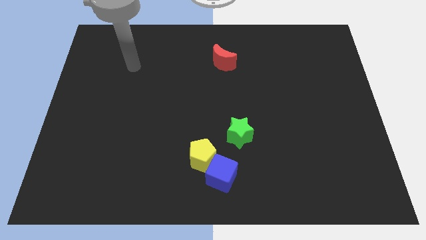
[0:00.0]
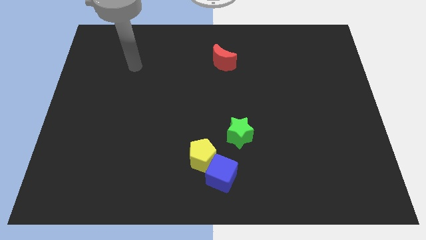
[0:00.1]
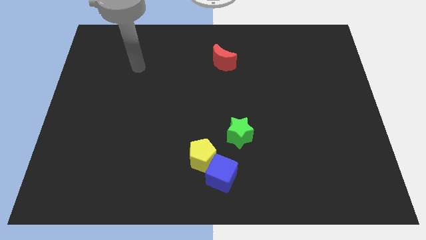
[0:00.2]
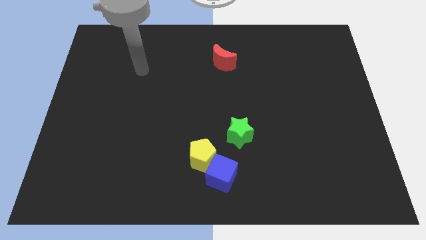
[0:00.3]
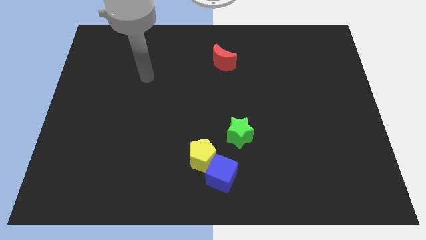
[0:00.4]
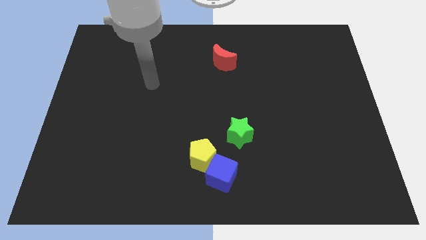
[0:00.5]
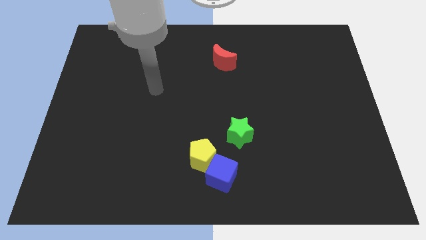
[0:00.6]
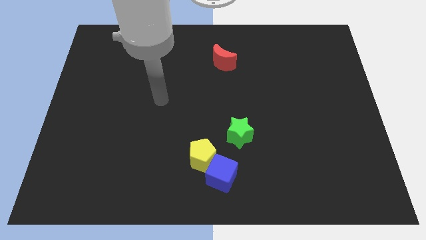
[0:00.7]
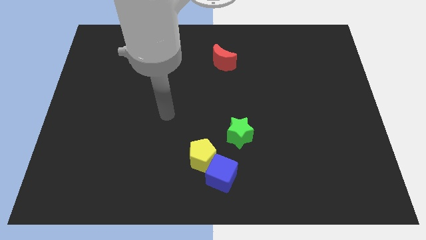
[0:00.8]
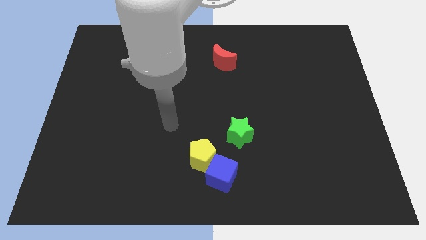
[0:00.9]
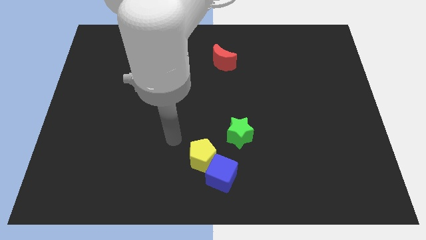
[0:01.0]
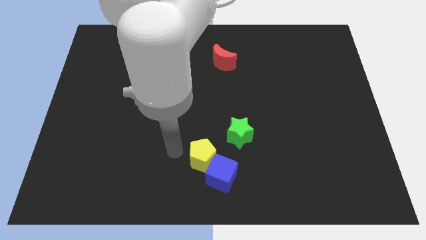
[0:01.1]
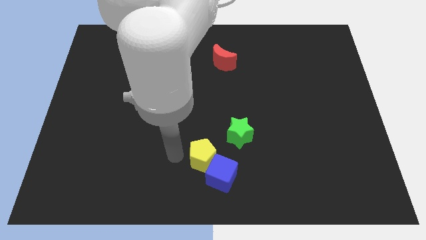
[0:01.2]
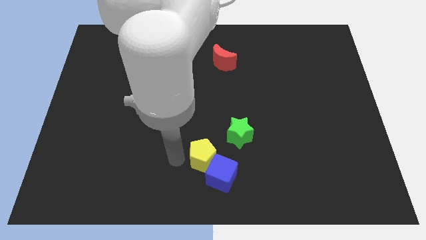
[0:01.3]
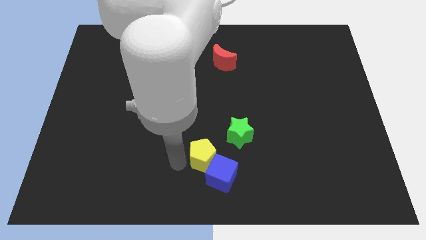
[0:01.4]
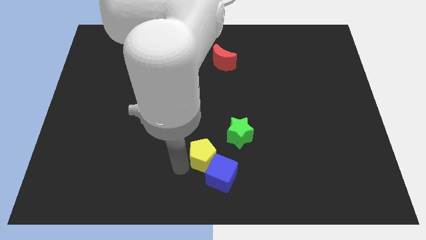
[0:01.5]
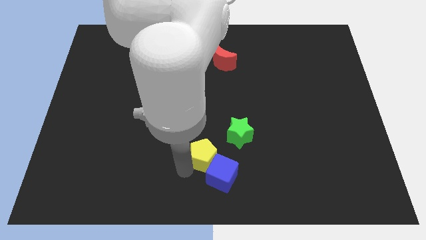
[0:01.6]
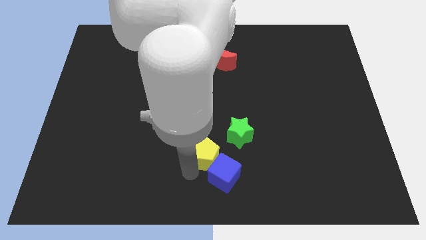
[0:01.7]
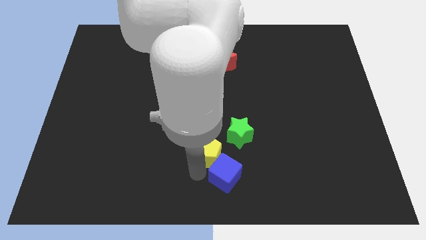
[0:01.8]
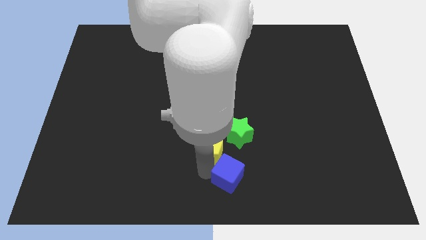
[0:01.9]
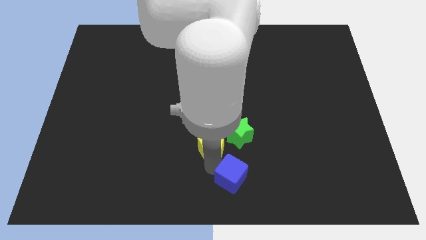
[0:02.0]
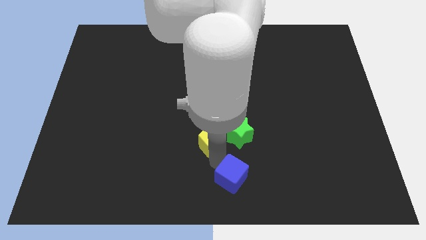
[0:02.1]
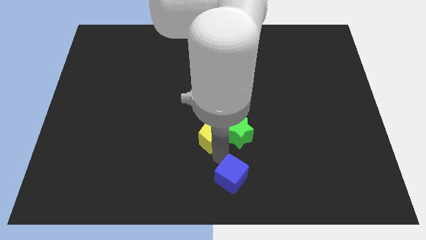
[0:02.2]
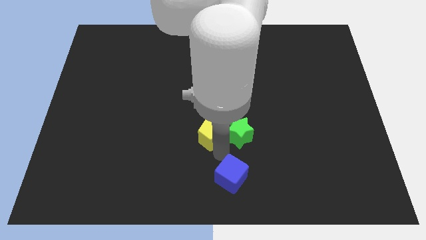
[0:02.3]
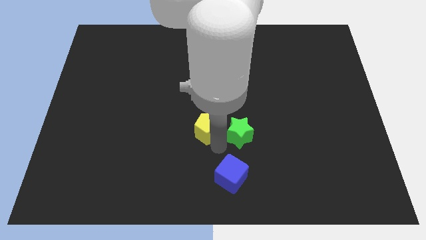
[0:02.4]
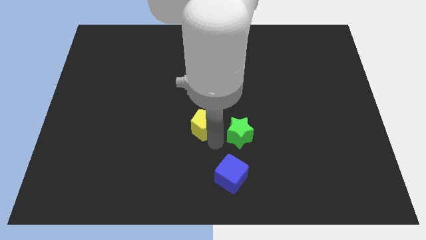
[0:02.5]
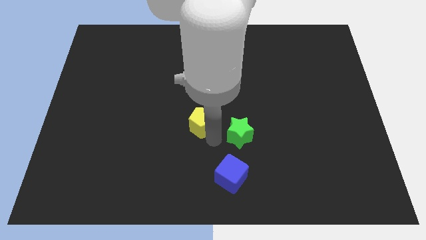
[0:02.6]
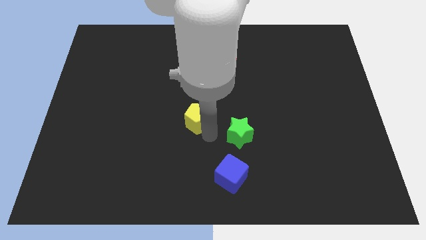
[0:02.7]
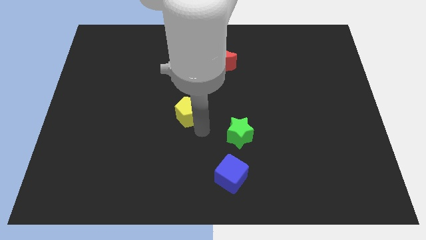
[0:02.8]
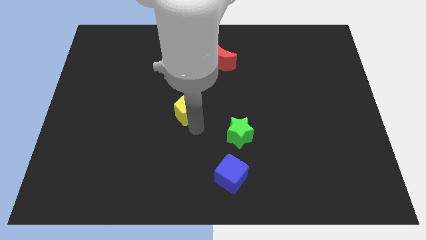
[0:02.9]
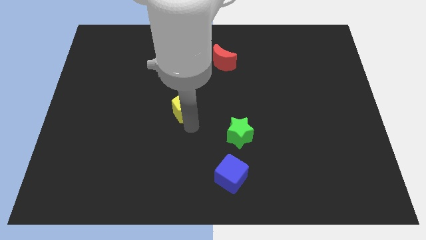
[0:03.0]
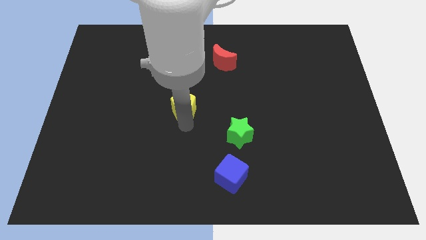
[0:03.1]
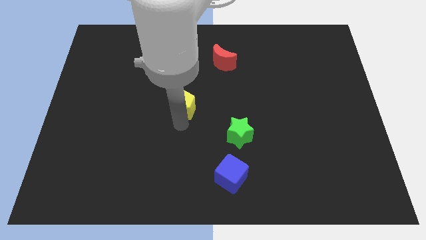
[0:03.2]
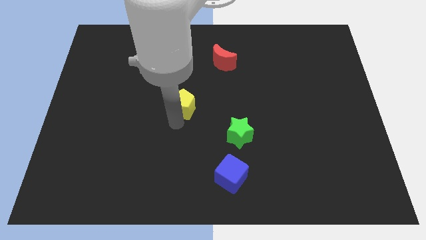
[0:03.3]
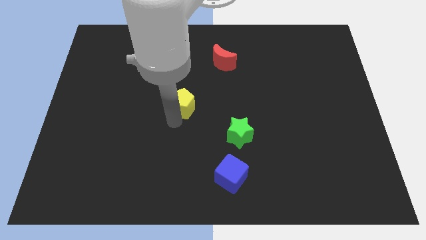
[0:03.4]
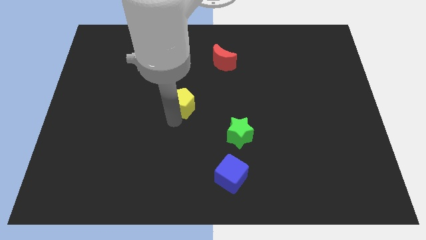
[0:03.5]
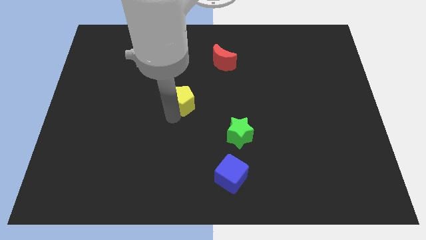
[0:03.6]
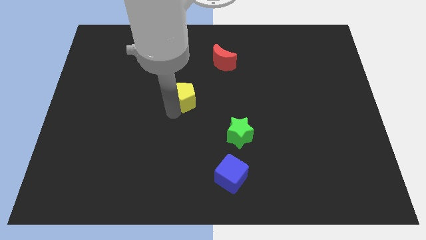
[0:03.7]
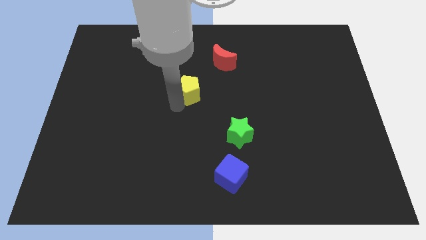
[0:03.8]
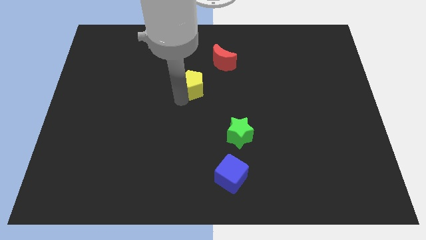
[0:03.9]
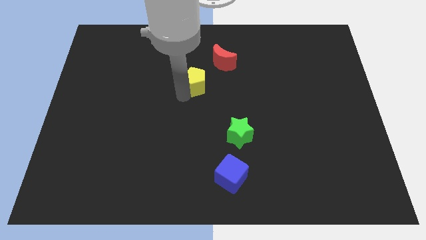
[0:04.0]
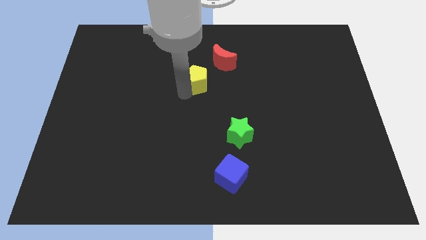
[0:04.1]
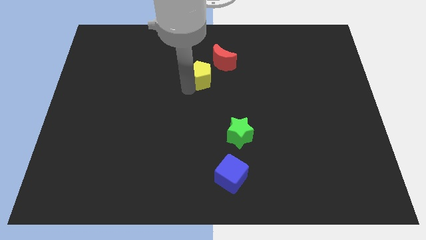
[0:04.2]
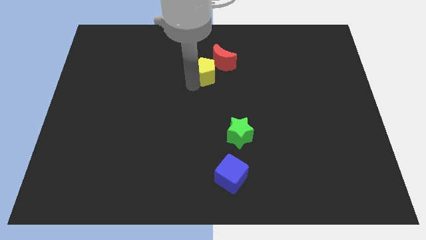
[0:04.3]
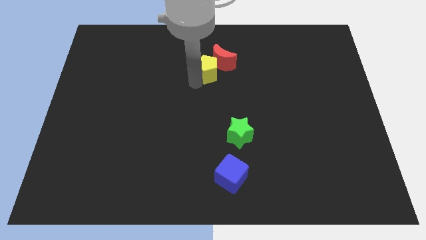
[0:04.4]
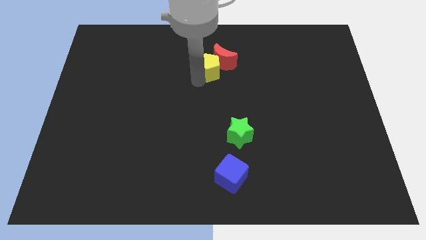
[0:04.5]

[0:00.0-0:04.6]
push the yellow block next to the moon

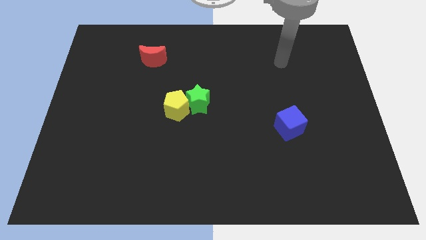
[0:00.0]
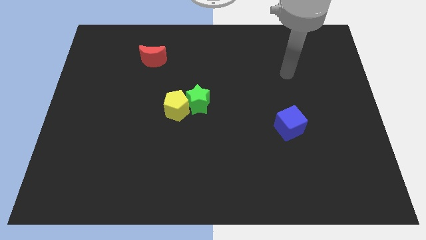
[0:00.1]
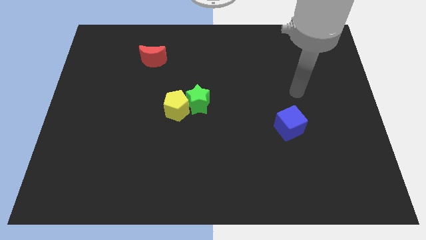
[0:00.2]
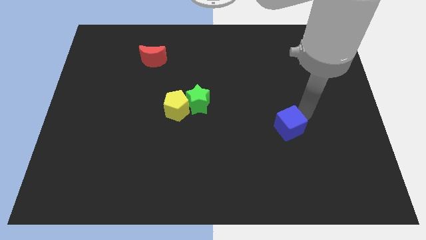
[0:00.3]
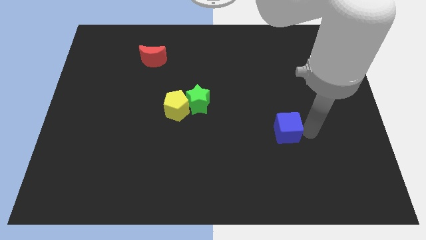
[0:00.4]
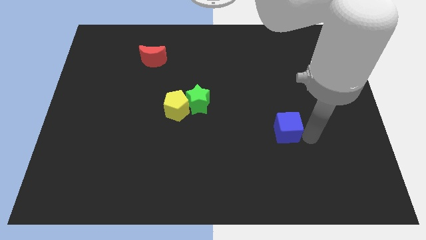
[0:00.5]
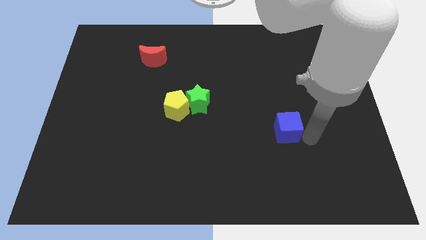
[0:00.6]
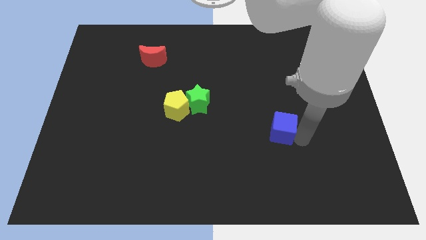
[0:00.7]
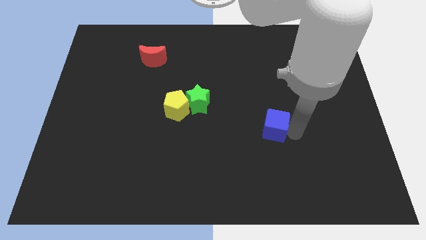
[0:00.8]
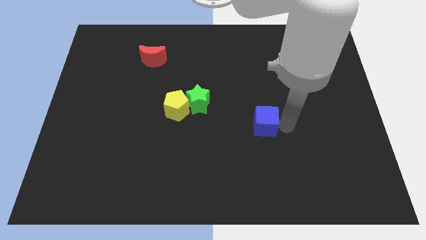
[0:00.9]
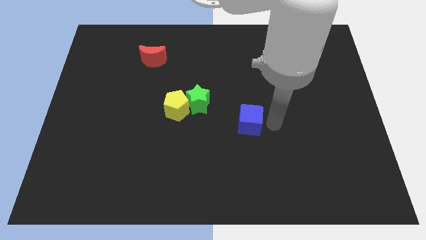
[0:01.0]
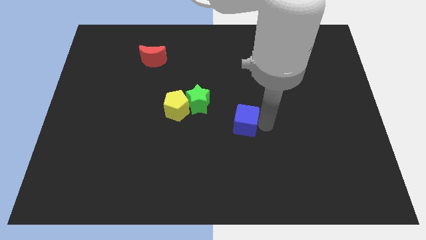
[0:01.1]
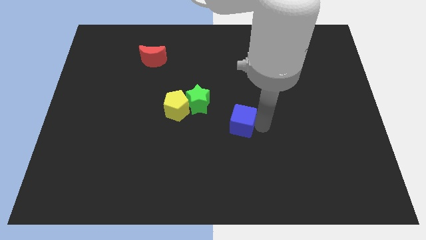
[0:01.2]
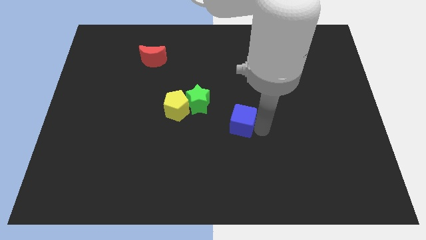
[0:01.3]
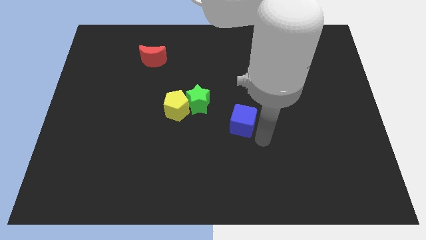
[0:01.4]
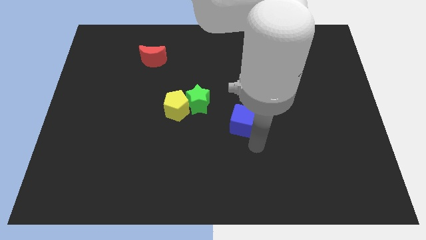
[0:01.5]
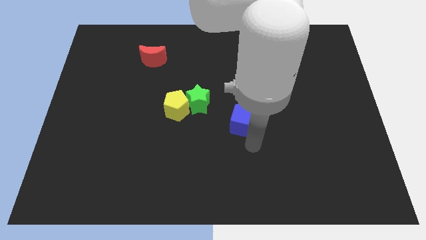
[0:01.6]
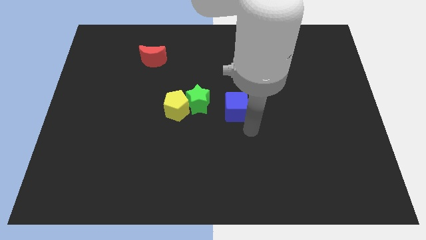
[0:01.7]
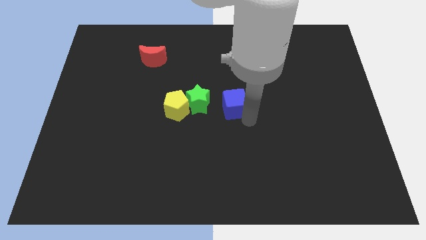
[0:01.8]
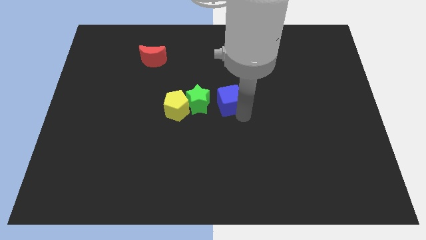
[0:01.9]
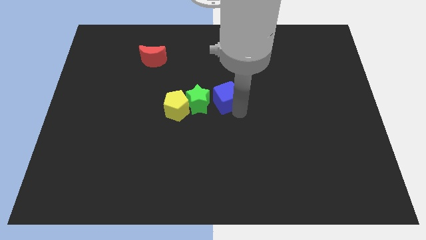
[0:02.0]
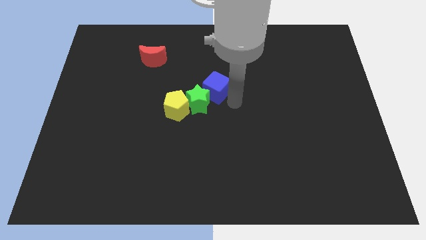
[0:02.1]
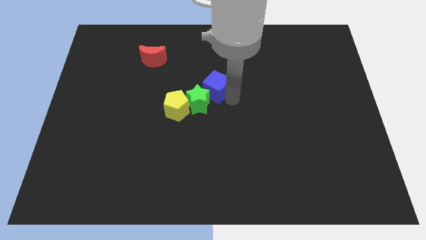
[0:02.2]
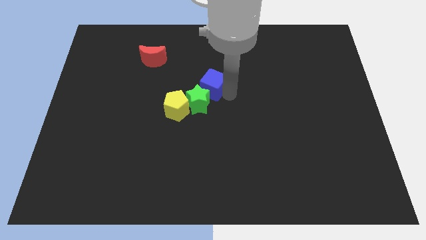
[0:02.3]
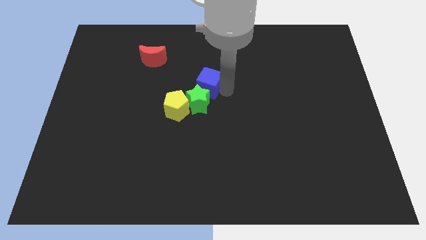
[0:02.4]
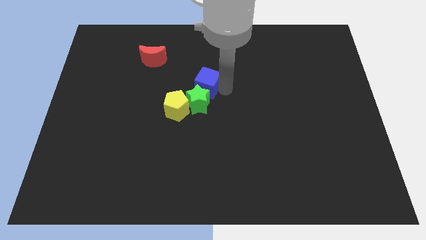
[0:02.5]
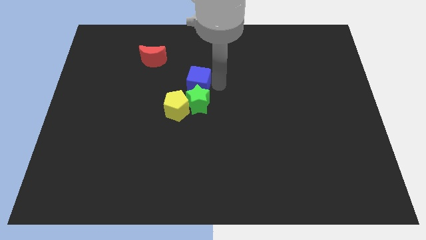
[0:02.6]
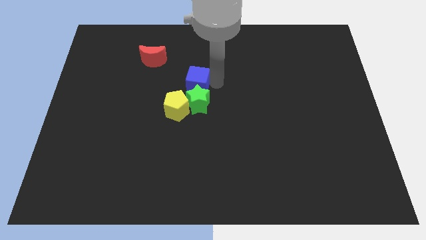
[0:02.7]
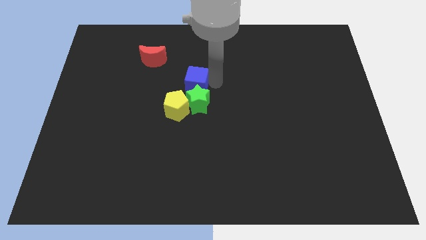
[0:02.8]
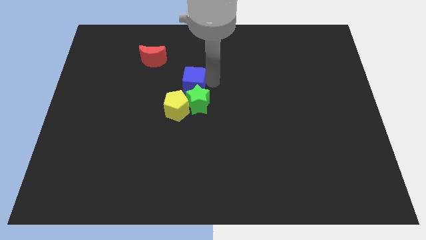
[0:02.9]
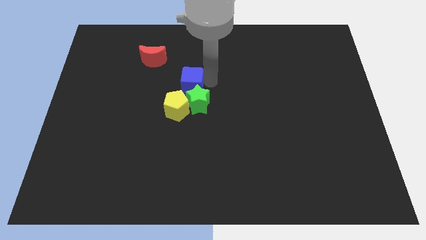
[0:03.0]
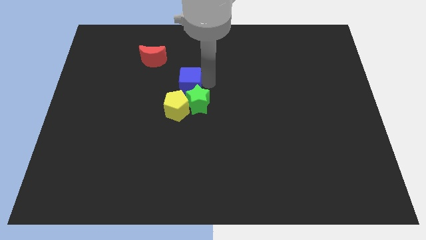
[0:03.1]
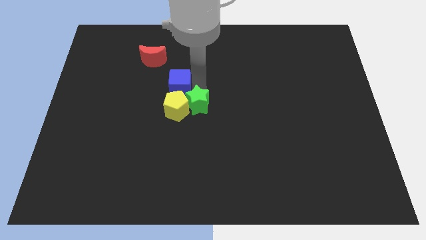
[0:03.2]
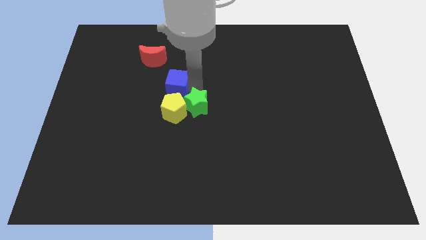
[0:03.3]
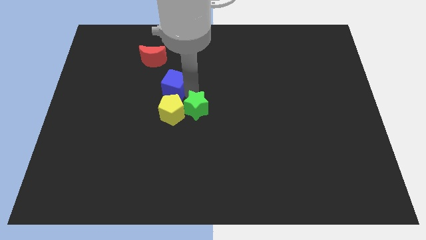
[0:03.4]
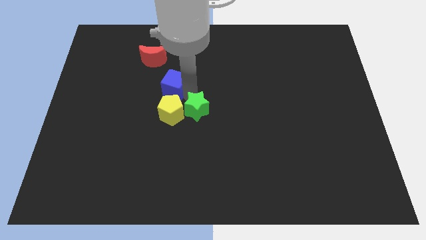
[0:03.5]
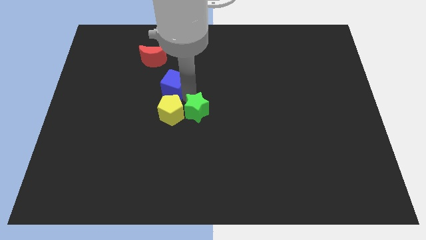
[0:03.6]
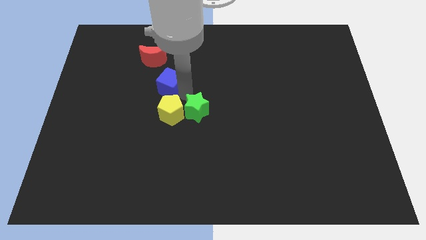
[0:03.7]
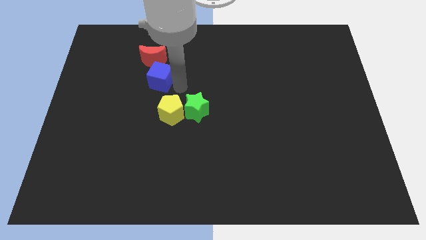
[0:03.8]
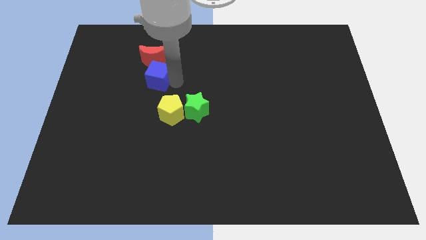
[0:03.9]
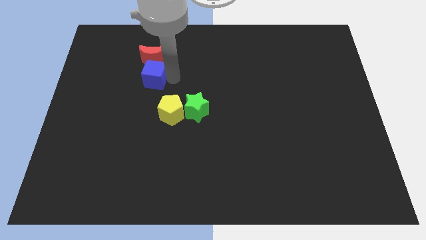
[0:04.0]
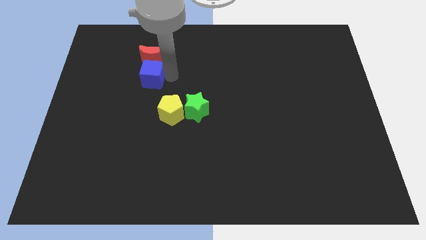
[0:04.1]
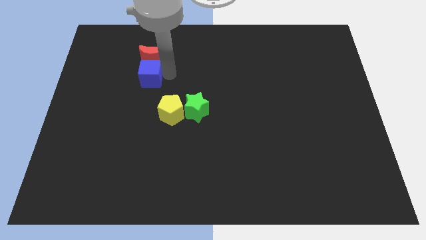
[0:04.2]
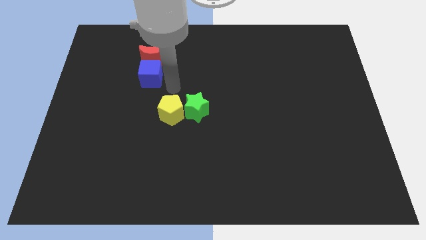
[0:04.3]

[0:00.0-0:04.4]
push the cube towards the red block
